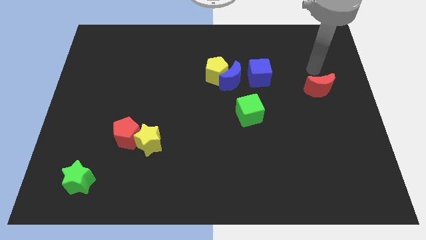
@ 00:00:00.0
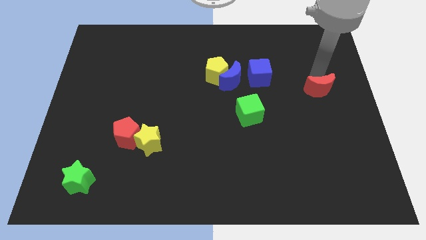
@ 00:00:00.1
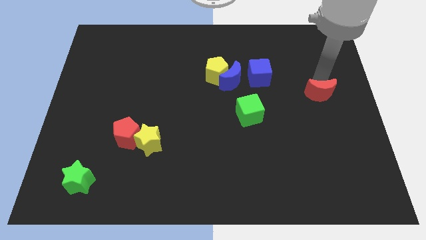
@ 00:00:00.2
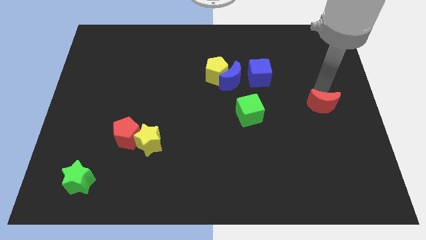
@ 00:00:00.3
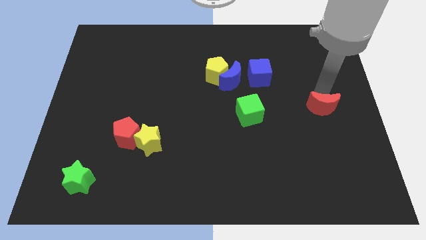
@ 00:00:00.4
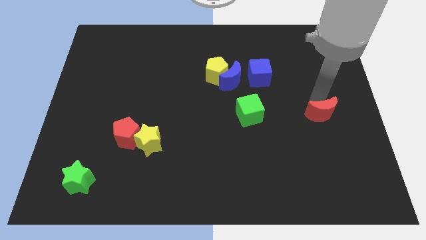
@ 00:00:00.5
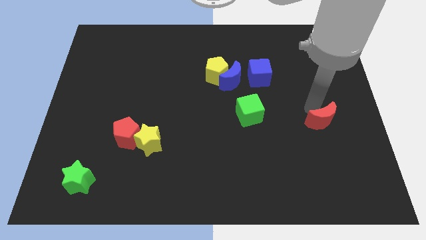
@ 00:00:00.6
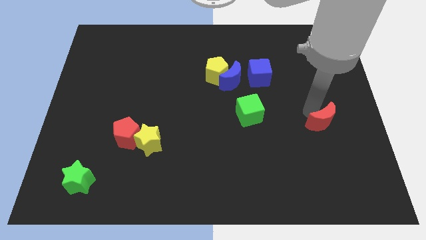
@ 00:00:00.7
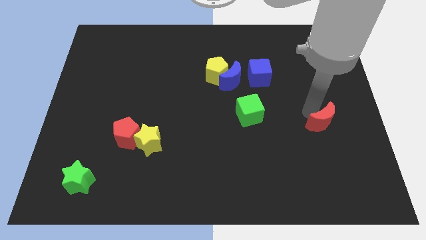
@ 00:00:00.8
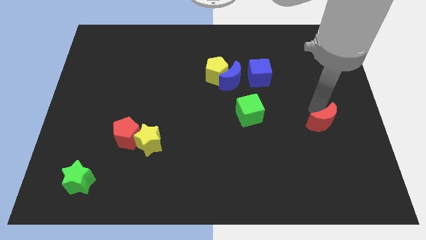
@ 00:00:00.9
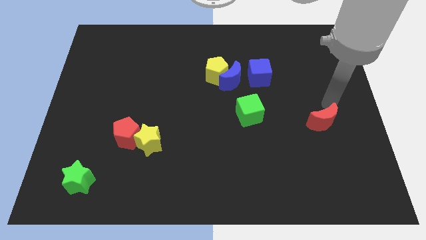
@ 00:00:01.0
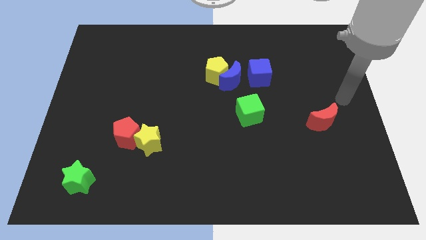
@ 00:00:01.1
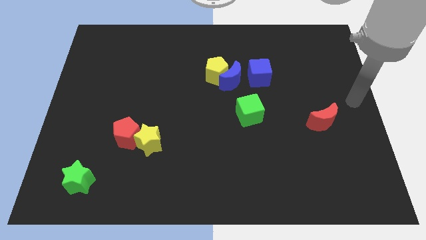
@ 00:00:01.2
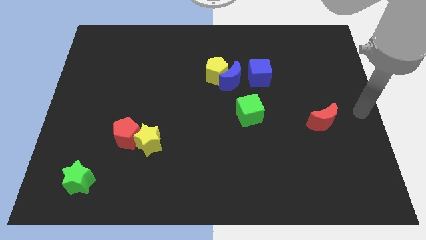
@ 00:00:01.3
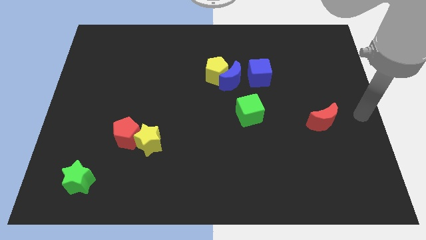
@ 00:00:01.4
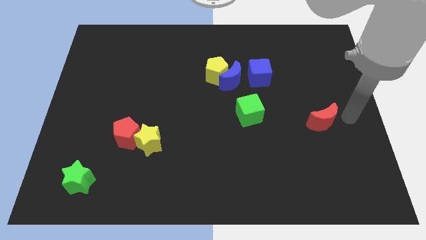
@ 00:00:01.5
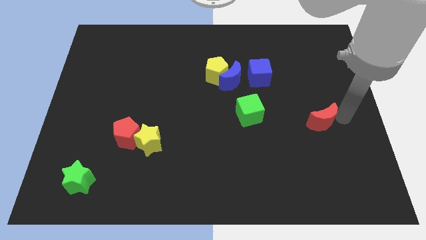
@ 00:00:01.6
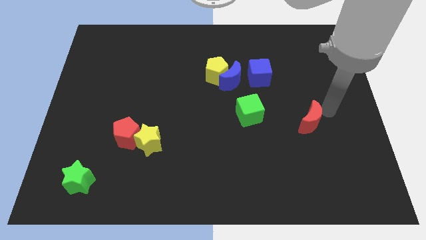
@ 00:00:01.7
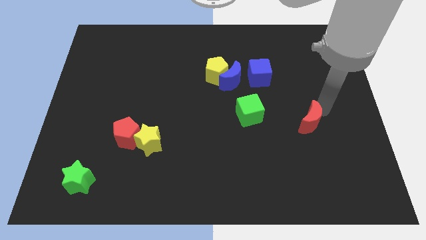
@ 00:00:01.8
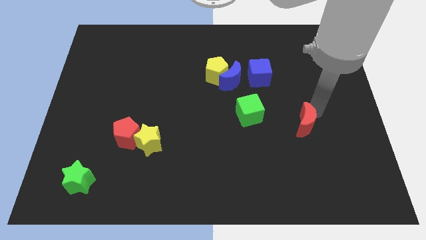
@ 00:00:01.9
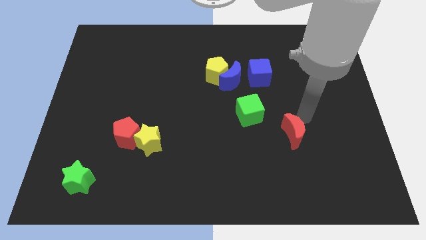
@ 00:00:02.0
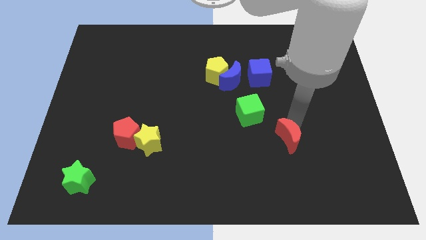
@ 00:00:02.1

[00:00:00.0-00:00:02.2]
move red moon to the center

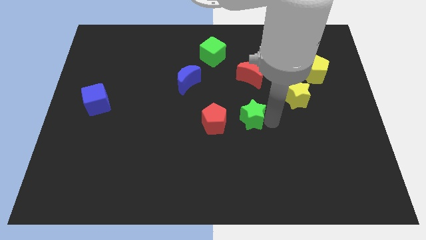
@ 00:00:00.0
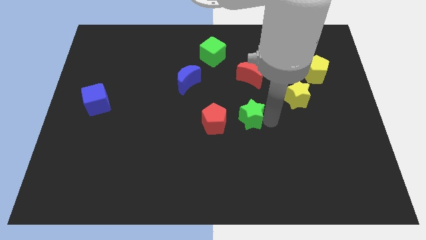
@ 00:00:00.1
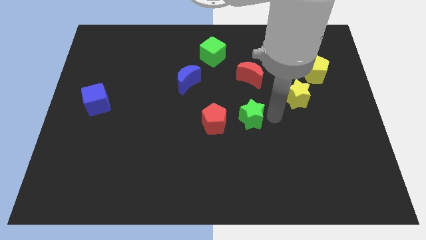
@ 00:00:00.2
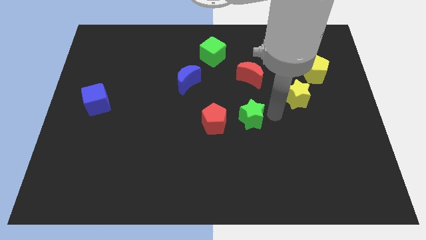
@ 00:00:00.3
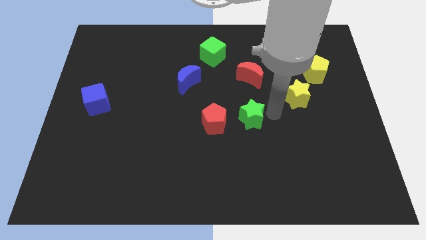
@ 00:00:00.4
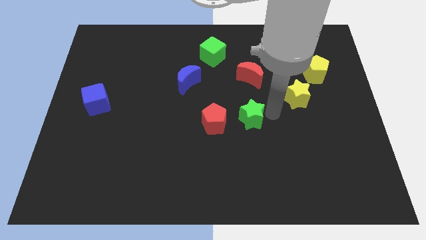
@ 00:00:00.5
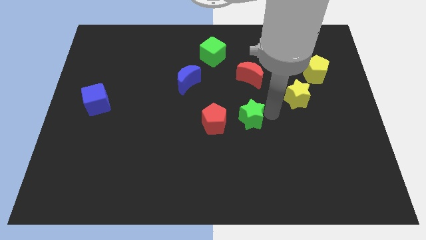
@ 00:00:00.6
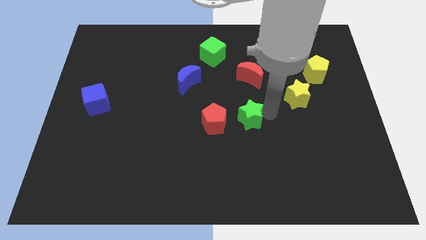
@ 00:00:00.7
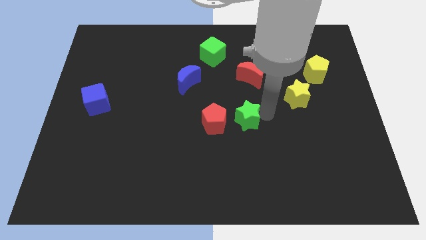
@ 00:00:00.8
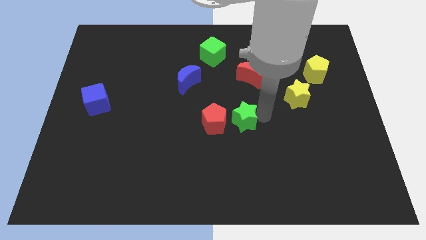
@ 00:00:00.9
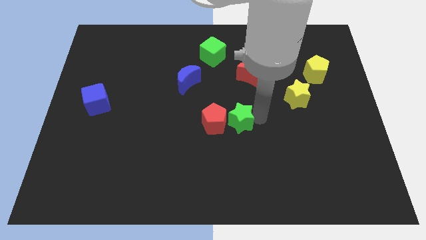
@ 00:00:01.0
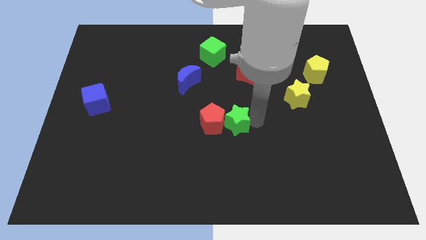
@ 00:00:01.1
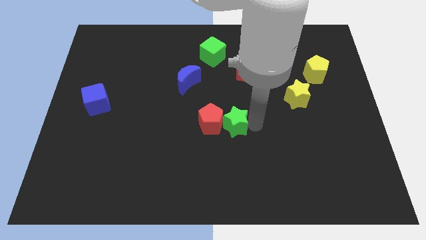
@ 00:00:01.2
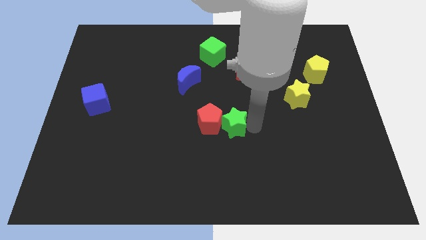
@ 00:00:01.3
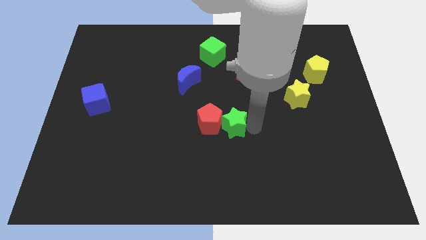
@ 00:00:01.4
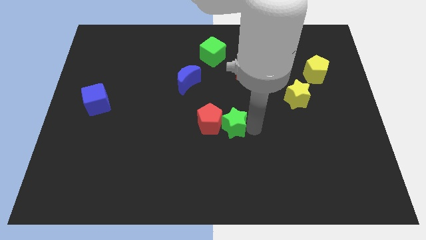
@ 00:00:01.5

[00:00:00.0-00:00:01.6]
make the green star touch the right side of the red pentagon

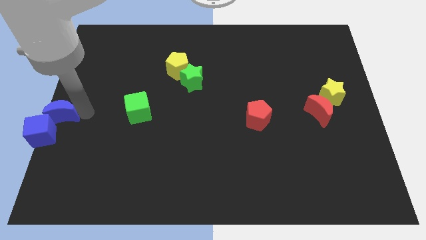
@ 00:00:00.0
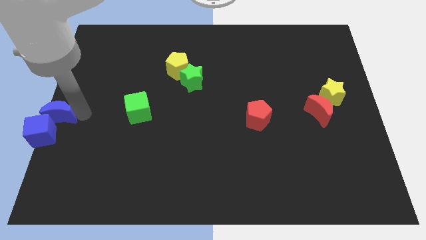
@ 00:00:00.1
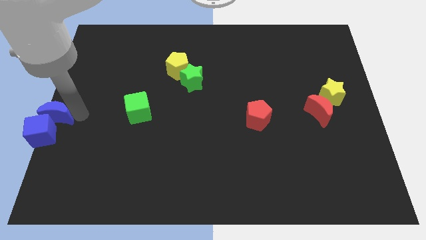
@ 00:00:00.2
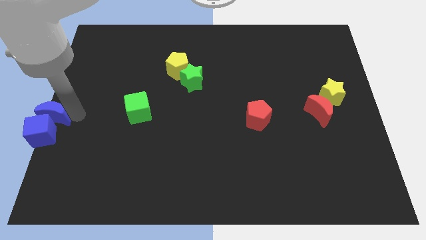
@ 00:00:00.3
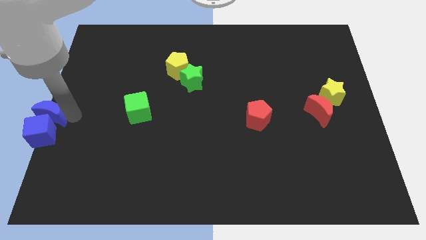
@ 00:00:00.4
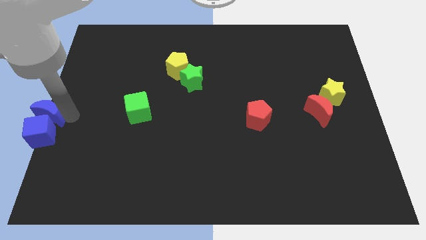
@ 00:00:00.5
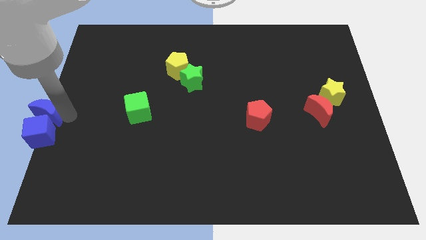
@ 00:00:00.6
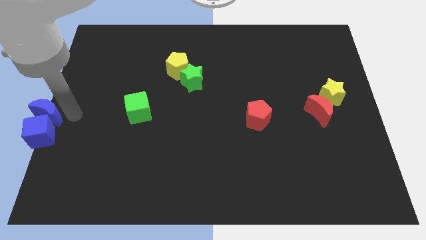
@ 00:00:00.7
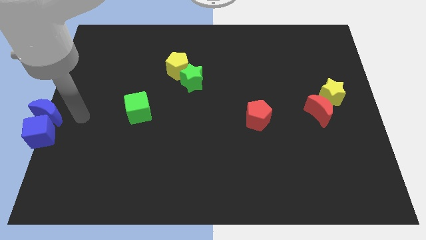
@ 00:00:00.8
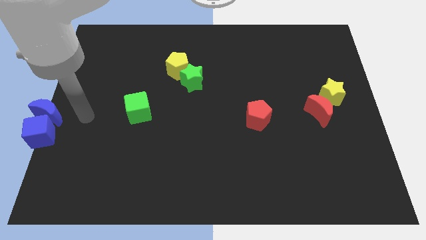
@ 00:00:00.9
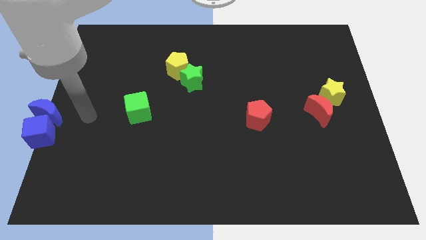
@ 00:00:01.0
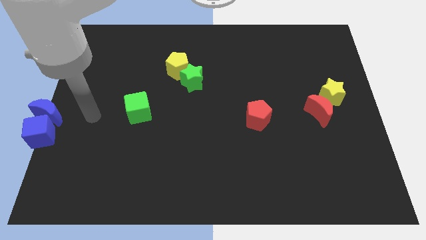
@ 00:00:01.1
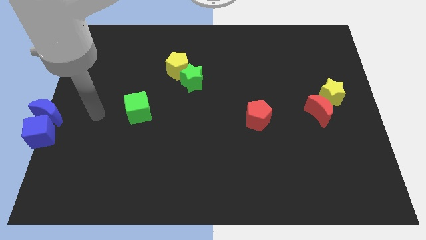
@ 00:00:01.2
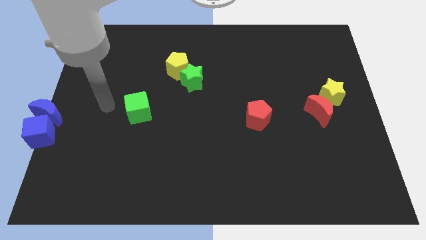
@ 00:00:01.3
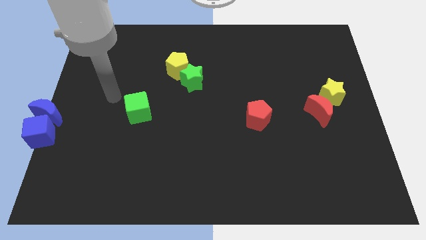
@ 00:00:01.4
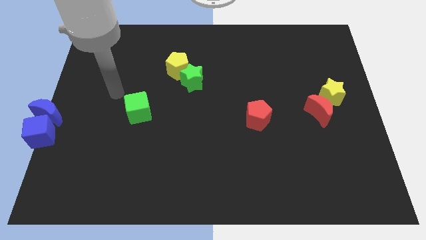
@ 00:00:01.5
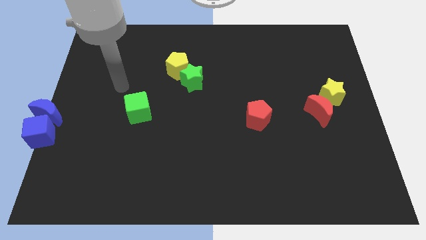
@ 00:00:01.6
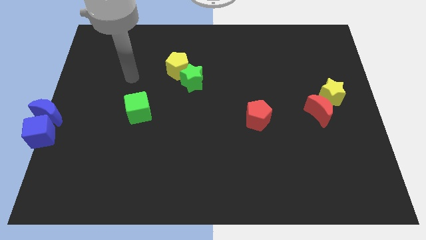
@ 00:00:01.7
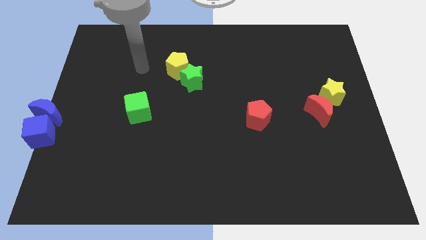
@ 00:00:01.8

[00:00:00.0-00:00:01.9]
slightly push the blue crescent above the blue cube

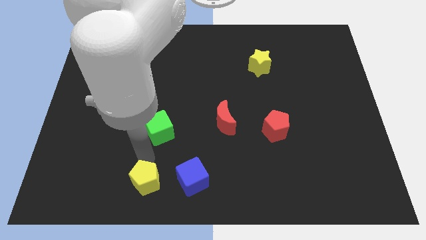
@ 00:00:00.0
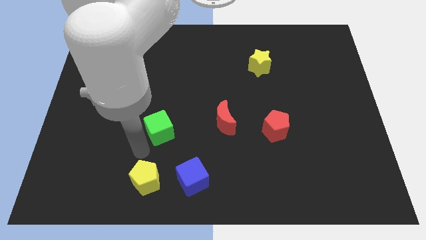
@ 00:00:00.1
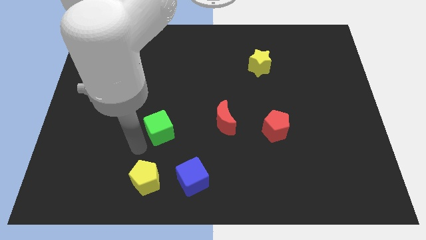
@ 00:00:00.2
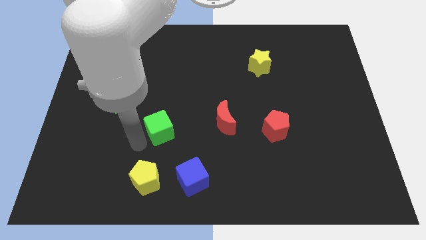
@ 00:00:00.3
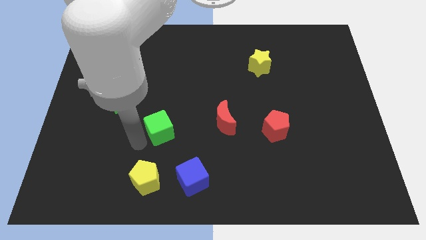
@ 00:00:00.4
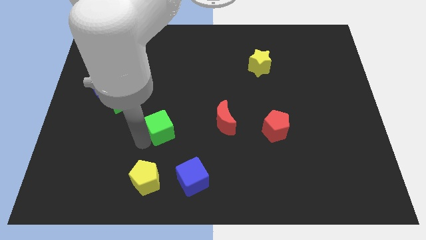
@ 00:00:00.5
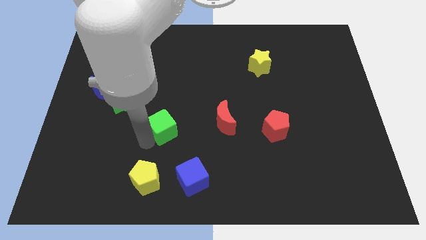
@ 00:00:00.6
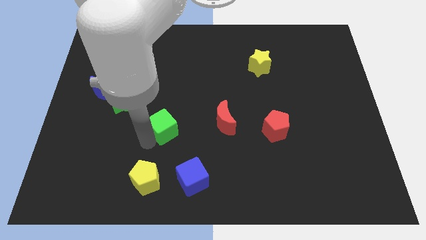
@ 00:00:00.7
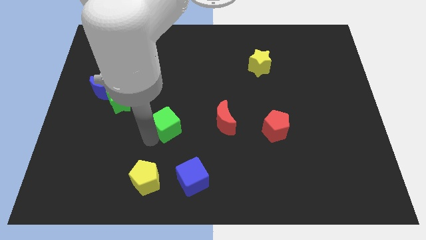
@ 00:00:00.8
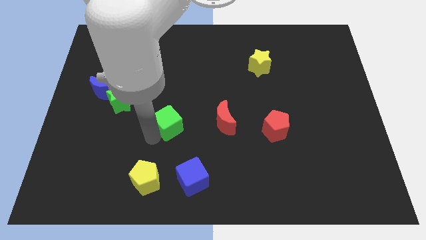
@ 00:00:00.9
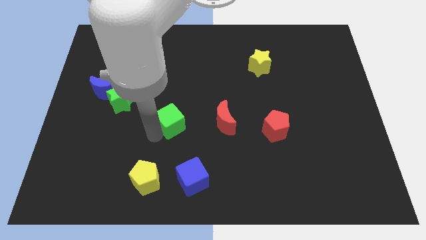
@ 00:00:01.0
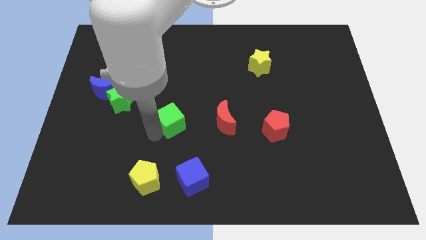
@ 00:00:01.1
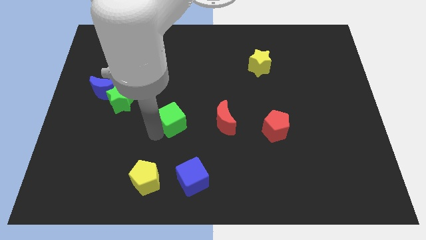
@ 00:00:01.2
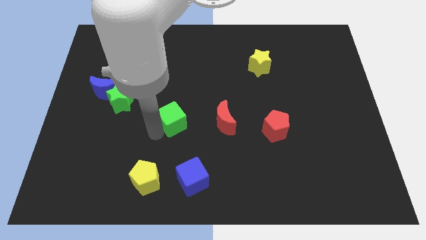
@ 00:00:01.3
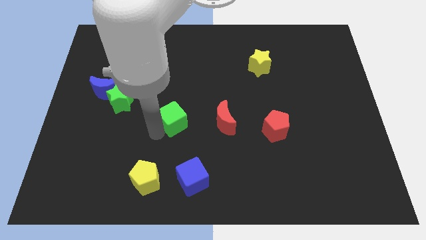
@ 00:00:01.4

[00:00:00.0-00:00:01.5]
move the green cube to the left of the red crescent

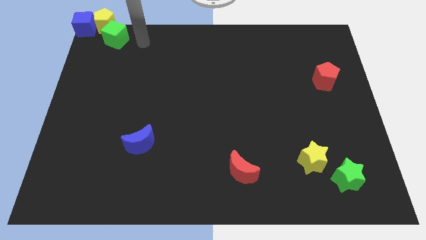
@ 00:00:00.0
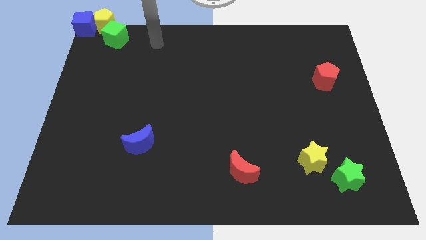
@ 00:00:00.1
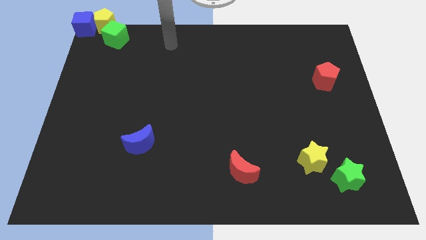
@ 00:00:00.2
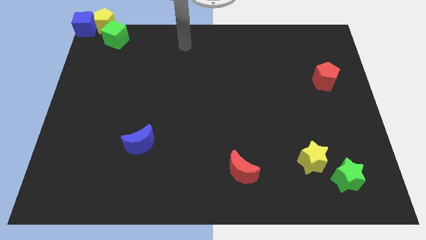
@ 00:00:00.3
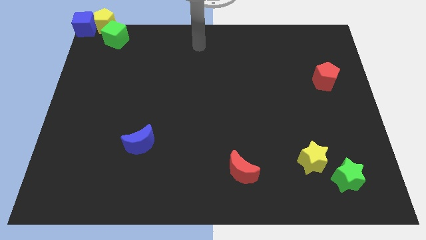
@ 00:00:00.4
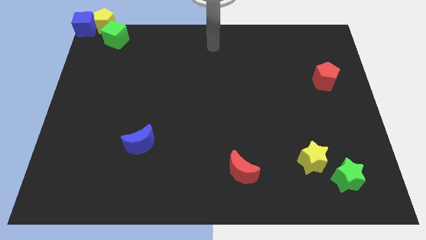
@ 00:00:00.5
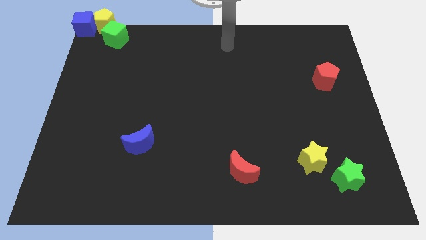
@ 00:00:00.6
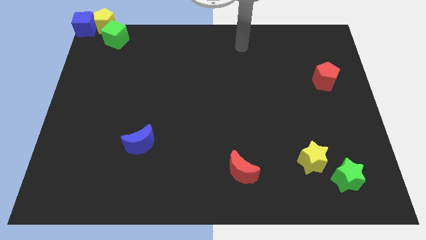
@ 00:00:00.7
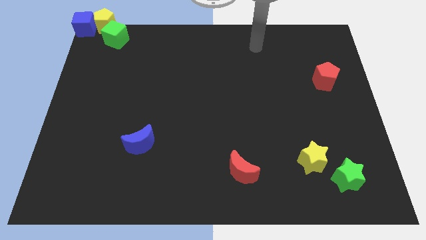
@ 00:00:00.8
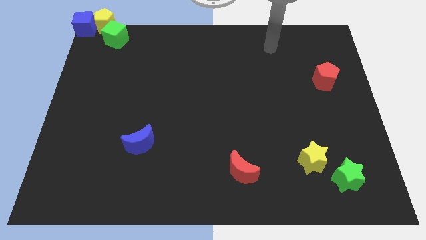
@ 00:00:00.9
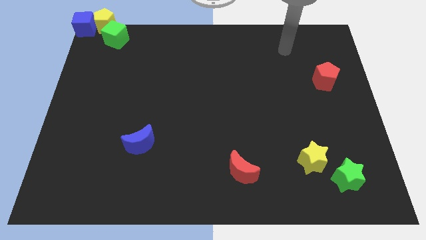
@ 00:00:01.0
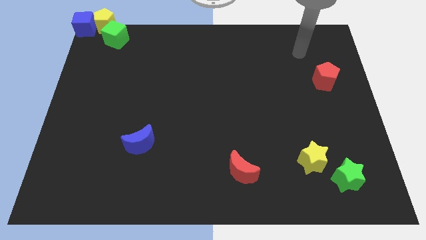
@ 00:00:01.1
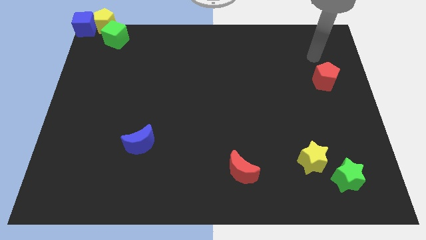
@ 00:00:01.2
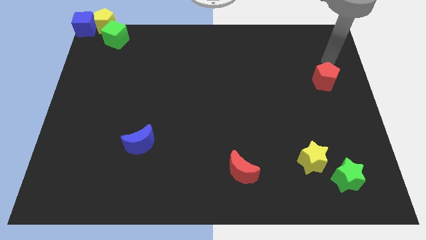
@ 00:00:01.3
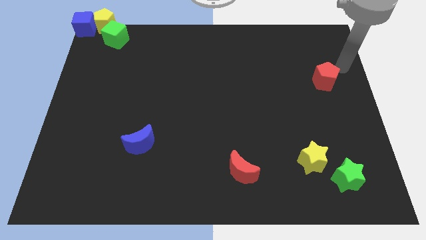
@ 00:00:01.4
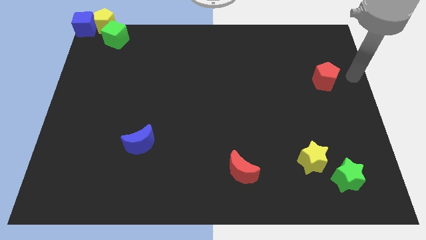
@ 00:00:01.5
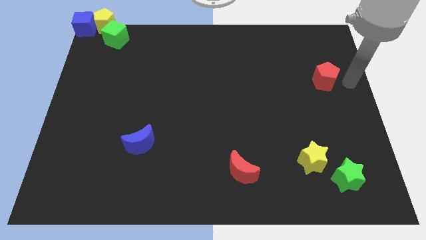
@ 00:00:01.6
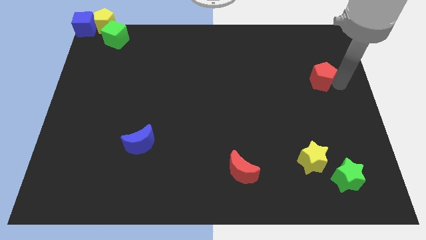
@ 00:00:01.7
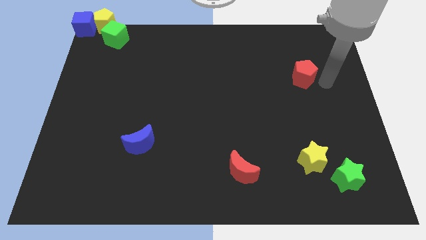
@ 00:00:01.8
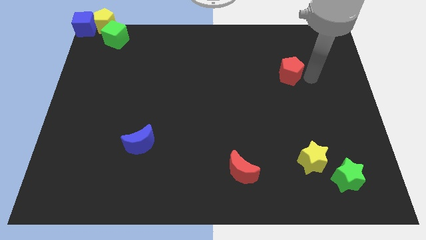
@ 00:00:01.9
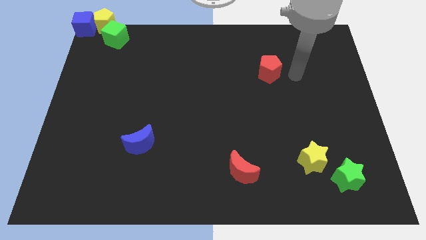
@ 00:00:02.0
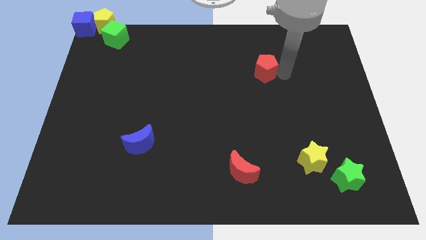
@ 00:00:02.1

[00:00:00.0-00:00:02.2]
slide the red pentagon to the left side of the board
